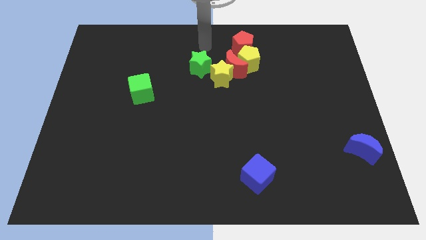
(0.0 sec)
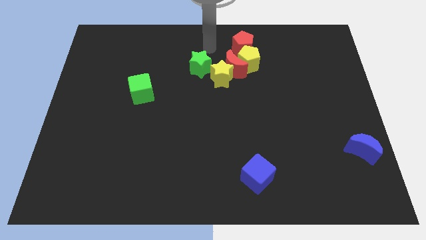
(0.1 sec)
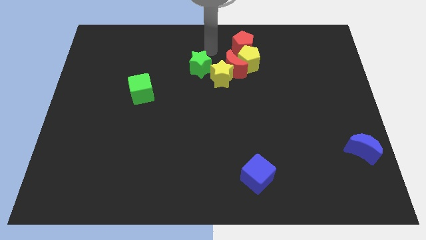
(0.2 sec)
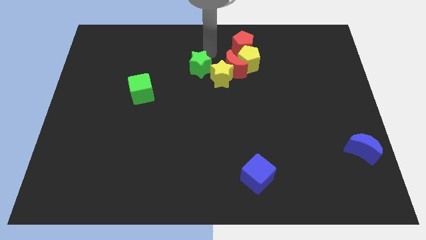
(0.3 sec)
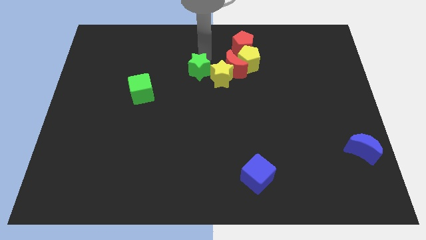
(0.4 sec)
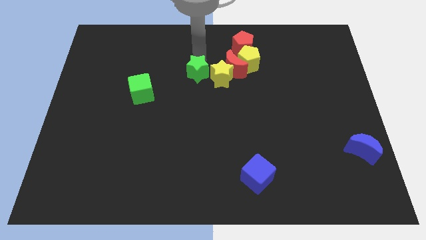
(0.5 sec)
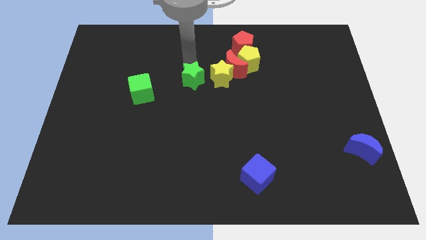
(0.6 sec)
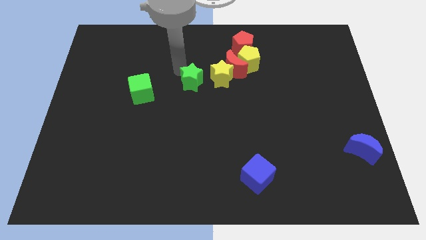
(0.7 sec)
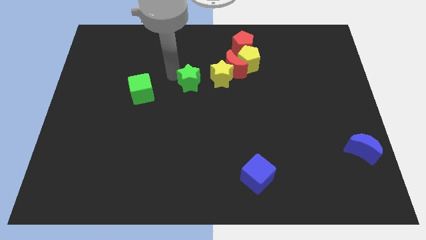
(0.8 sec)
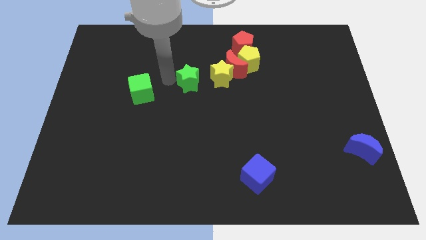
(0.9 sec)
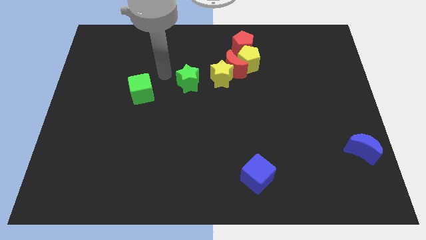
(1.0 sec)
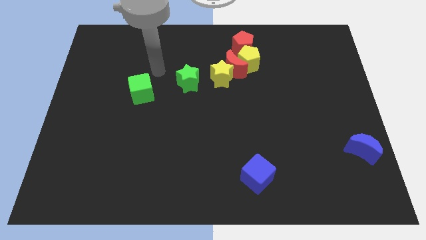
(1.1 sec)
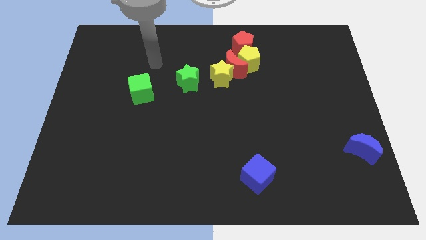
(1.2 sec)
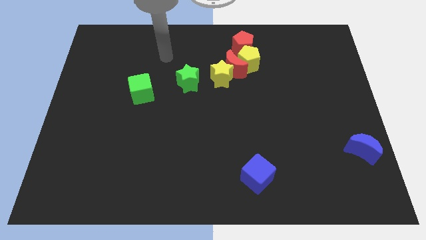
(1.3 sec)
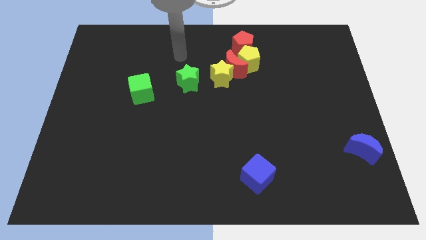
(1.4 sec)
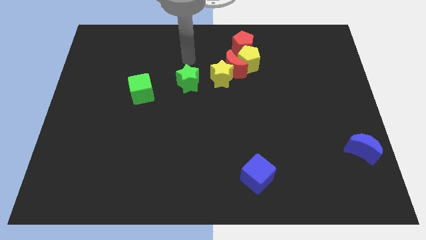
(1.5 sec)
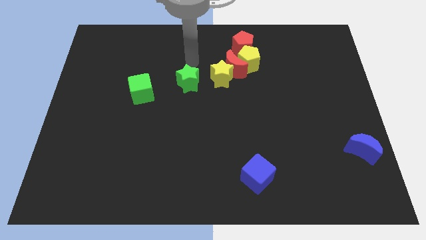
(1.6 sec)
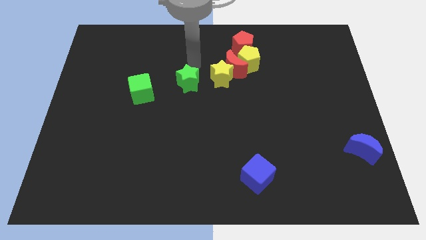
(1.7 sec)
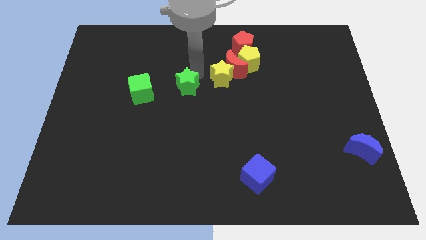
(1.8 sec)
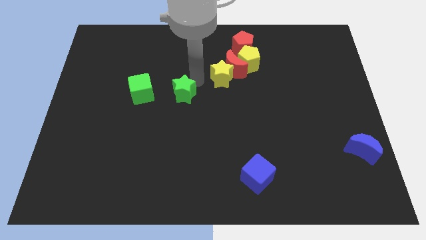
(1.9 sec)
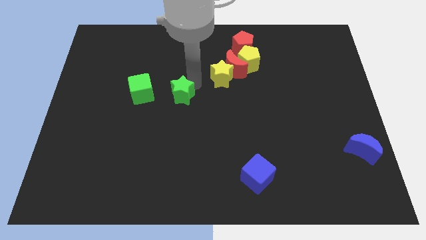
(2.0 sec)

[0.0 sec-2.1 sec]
move green star away from the yellow star

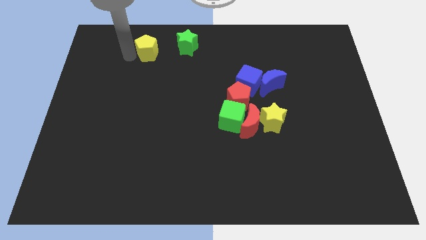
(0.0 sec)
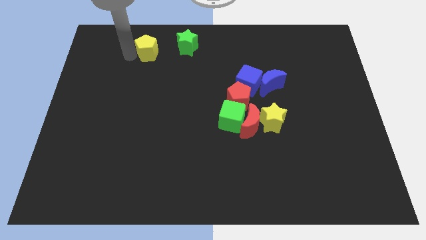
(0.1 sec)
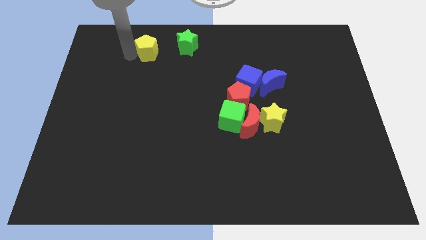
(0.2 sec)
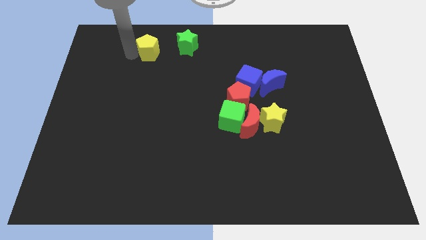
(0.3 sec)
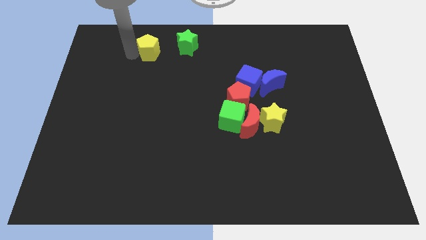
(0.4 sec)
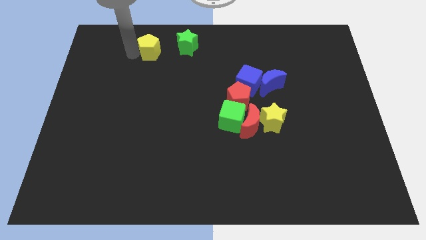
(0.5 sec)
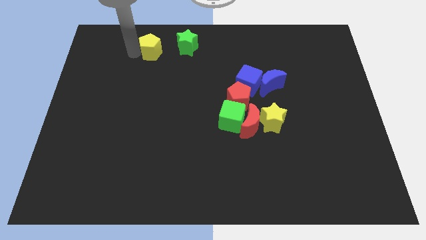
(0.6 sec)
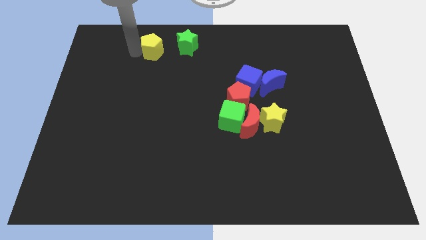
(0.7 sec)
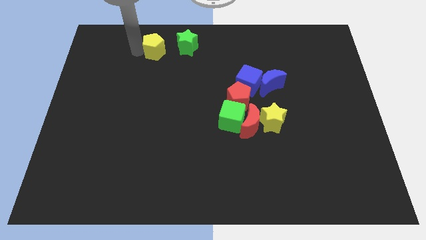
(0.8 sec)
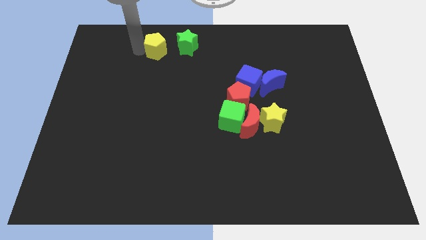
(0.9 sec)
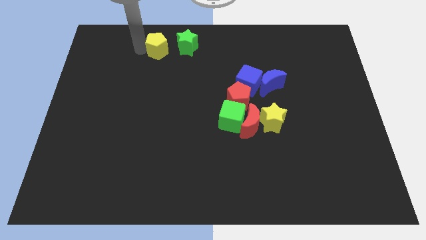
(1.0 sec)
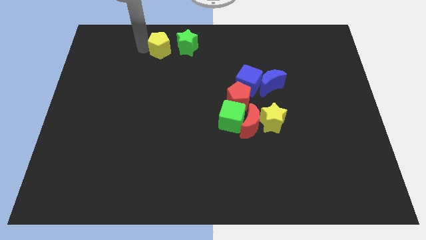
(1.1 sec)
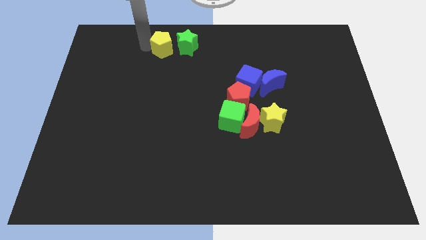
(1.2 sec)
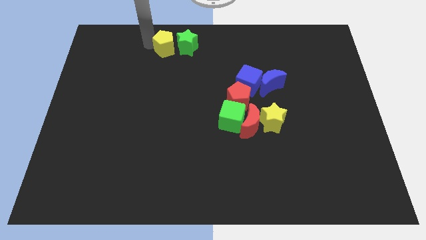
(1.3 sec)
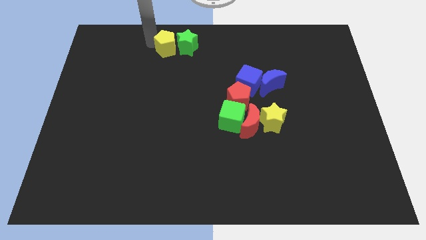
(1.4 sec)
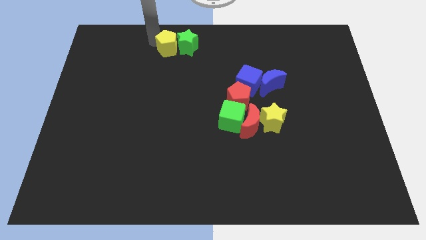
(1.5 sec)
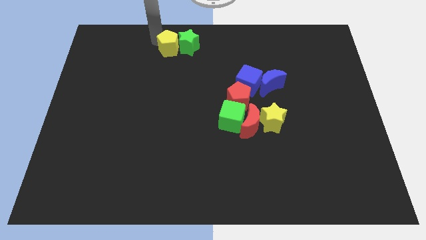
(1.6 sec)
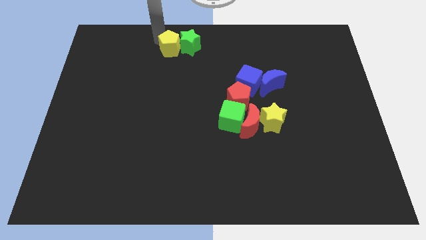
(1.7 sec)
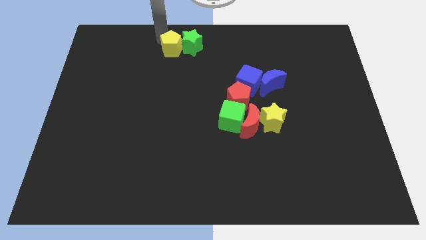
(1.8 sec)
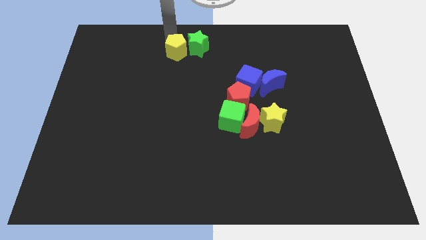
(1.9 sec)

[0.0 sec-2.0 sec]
slide the yellow pentagon to the left side of the green star

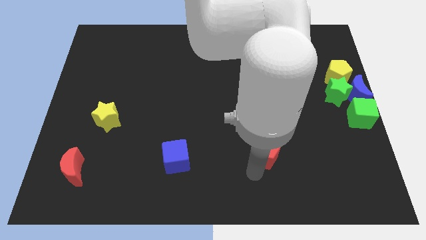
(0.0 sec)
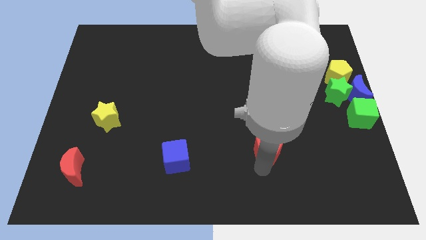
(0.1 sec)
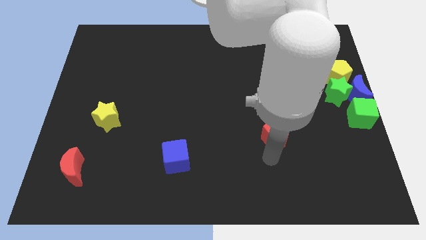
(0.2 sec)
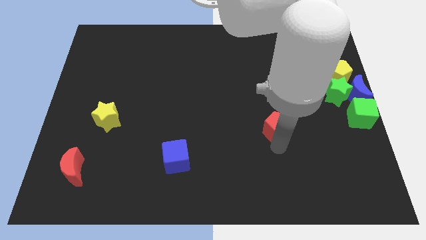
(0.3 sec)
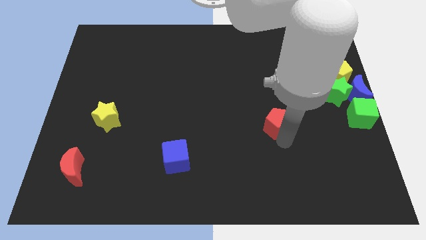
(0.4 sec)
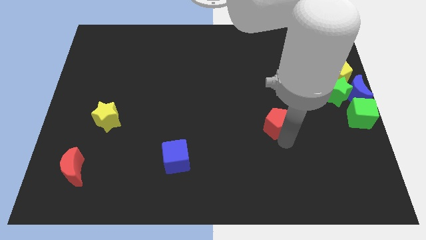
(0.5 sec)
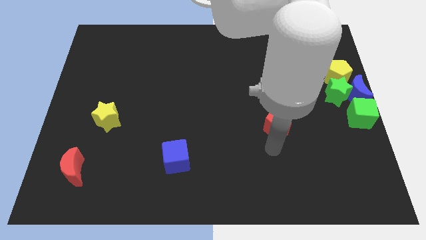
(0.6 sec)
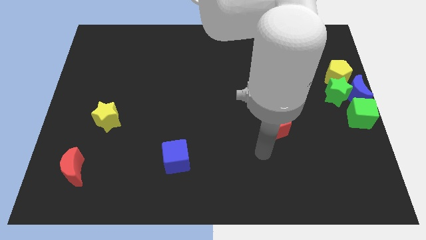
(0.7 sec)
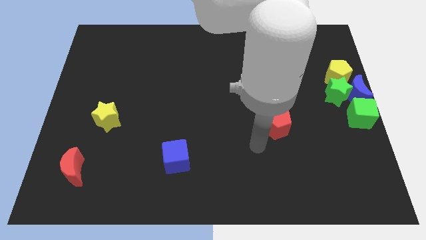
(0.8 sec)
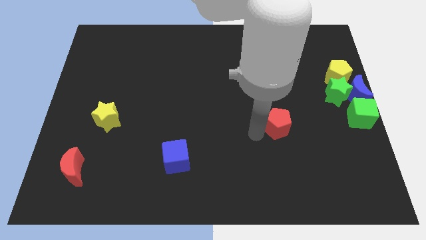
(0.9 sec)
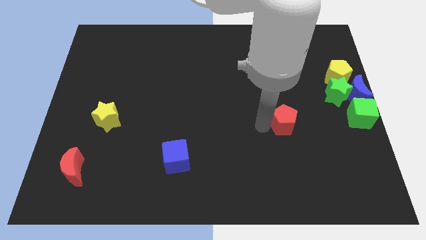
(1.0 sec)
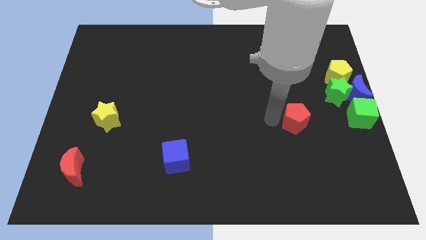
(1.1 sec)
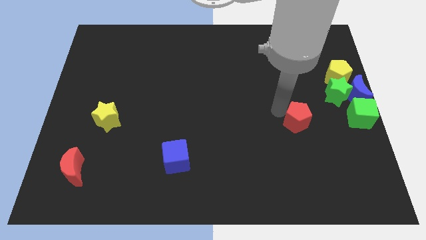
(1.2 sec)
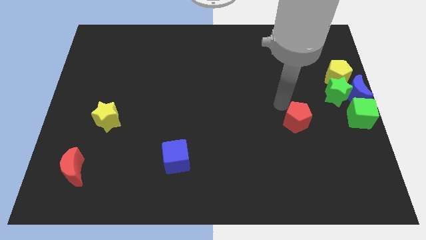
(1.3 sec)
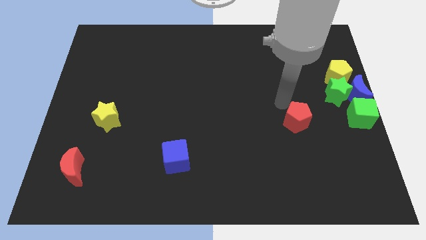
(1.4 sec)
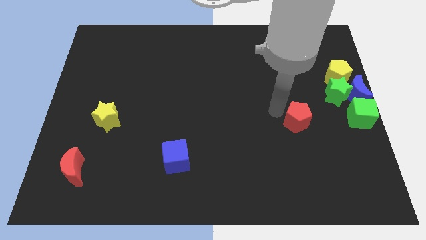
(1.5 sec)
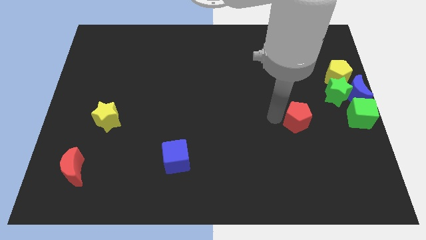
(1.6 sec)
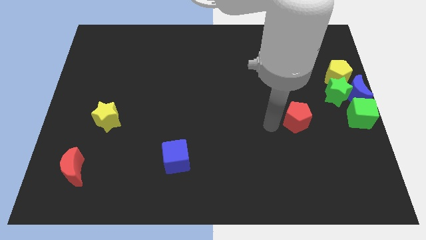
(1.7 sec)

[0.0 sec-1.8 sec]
move the red pentagon parallel to the left side of the green cube

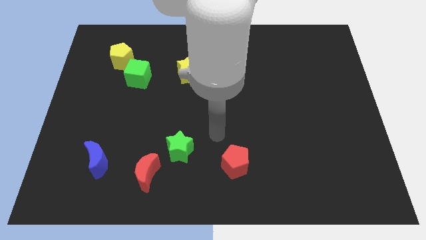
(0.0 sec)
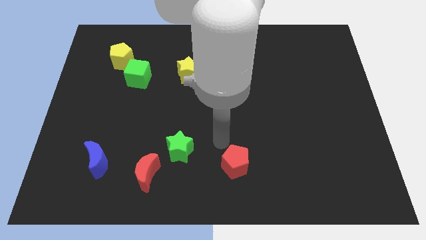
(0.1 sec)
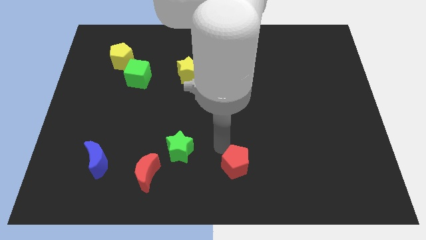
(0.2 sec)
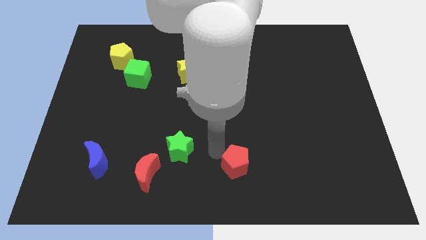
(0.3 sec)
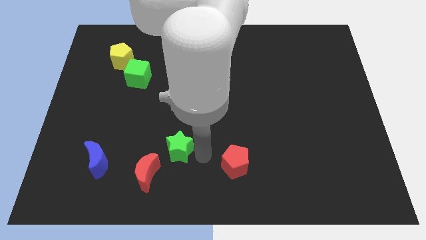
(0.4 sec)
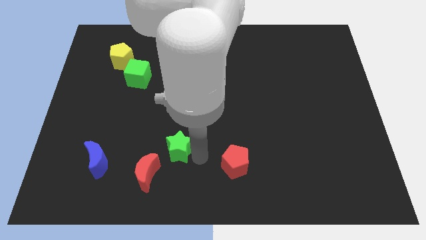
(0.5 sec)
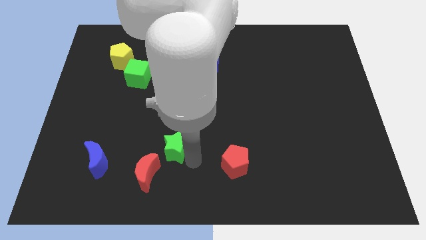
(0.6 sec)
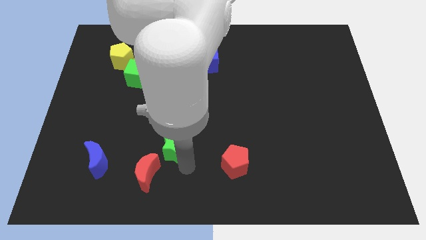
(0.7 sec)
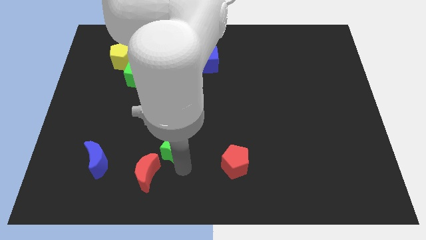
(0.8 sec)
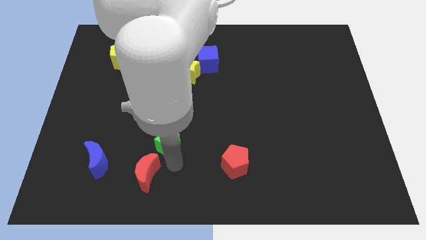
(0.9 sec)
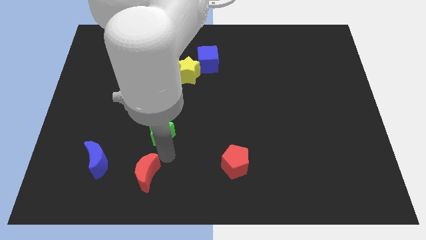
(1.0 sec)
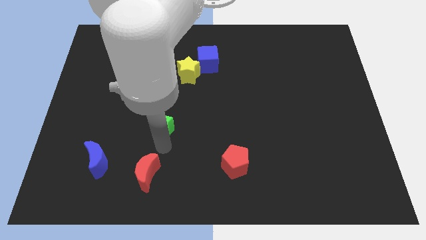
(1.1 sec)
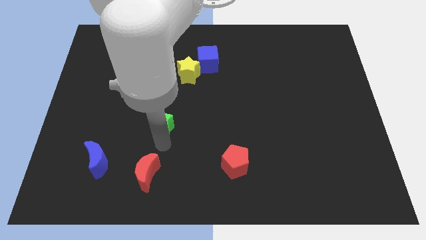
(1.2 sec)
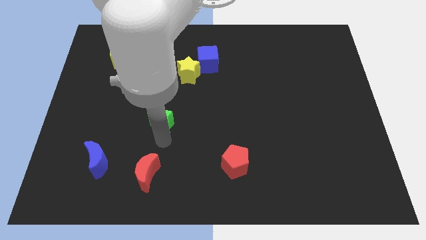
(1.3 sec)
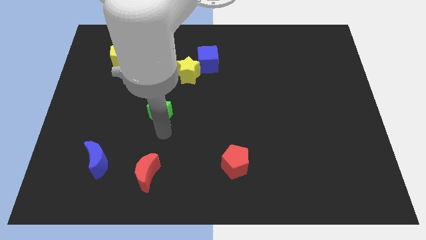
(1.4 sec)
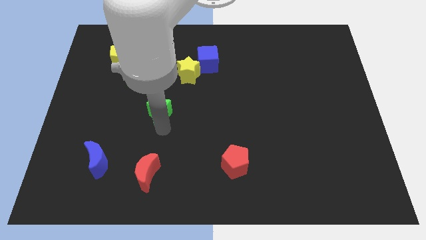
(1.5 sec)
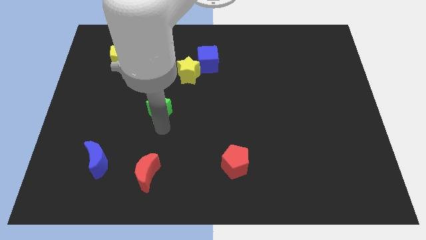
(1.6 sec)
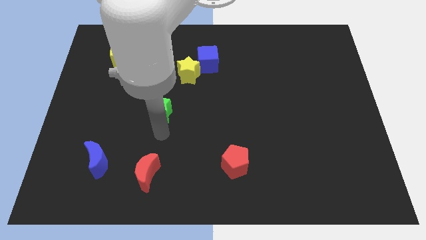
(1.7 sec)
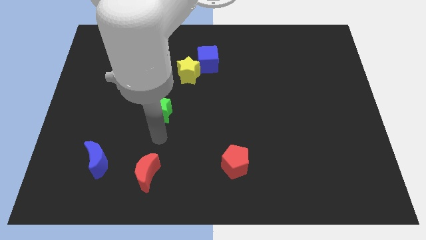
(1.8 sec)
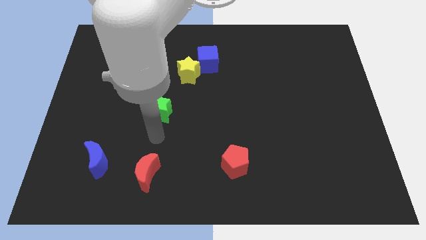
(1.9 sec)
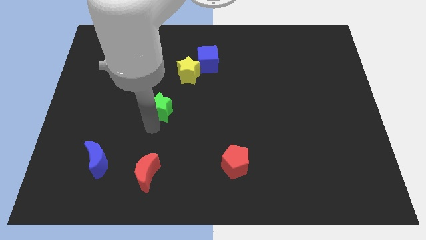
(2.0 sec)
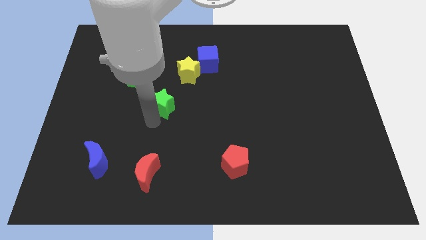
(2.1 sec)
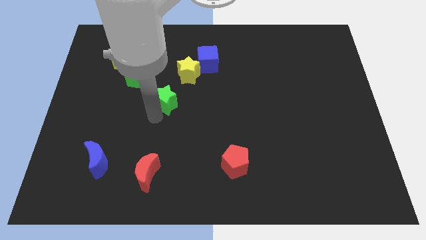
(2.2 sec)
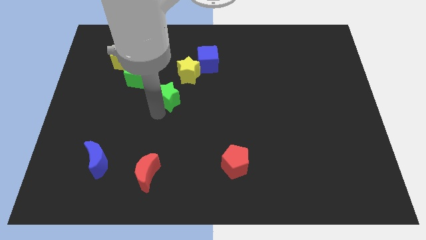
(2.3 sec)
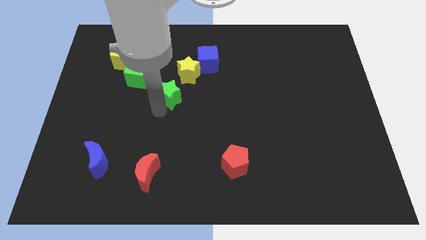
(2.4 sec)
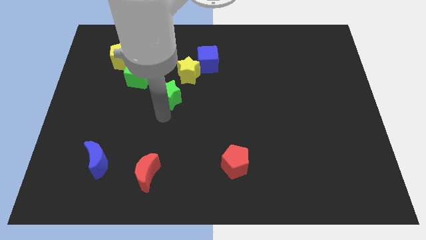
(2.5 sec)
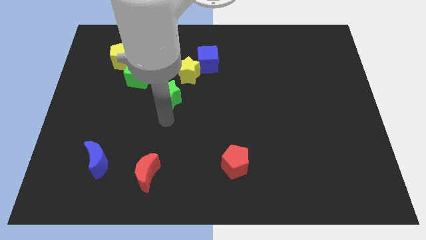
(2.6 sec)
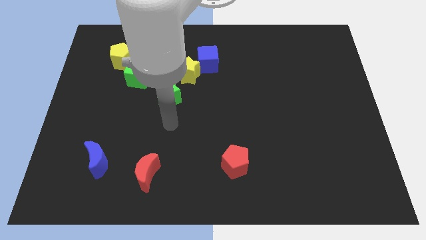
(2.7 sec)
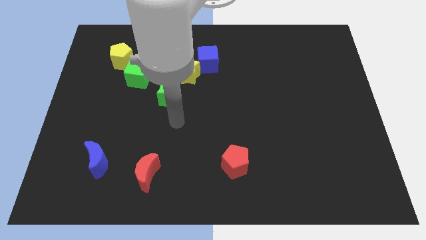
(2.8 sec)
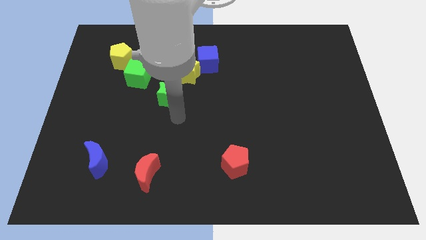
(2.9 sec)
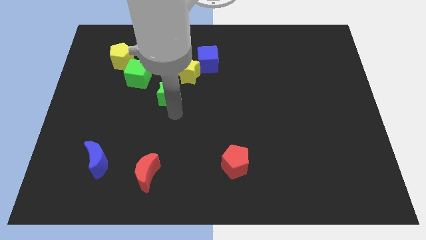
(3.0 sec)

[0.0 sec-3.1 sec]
drag green star to the bottom left of yellow star
